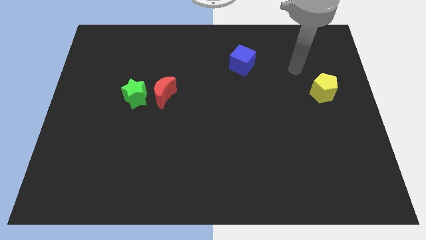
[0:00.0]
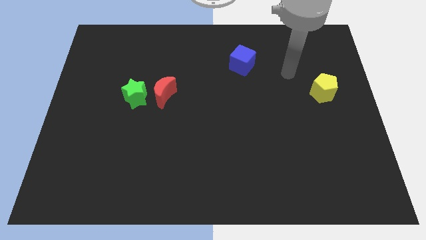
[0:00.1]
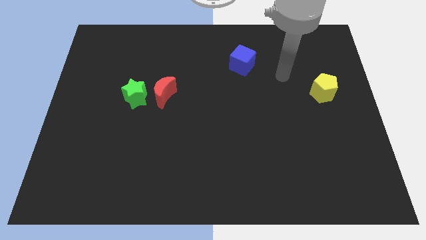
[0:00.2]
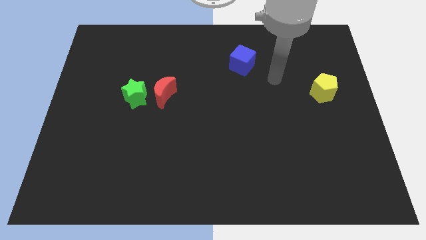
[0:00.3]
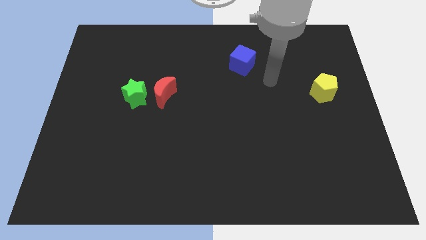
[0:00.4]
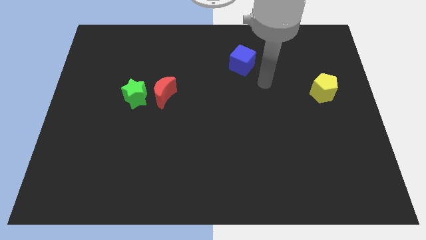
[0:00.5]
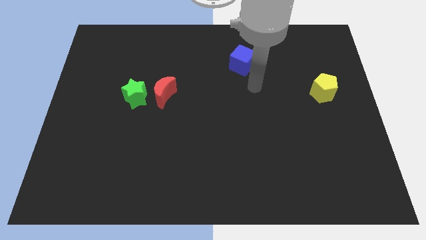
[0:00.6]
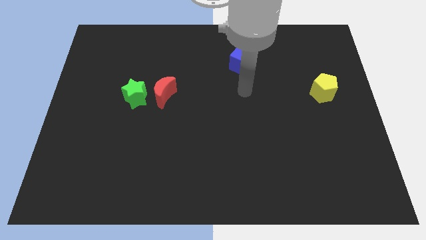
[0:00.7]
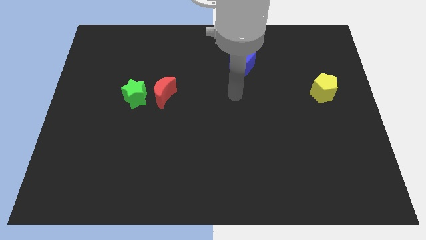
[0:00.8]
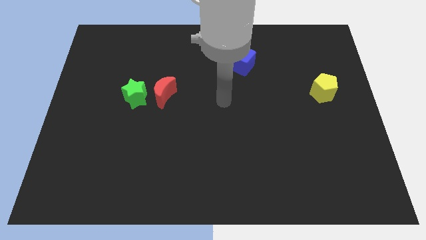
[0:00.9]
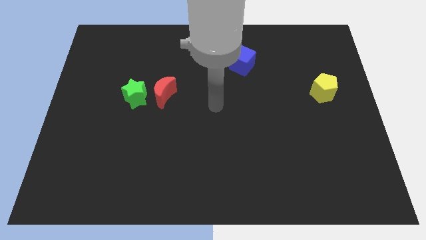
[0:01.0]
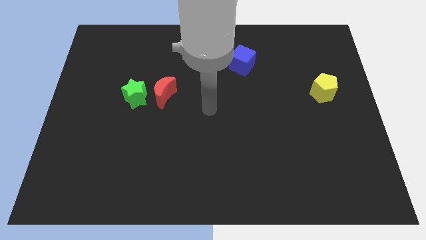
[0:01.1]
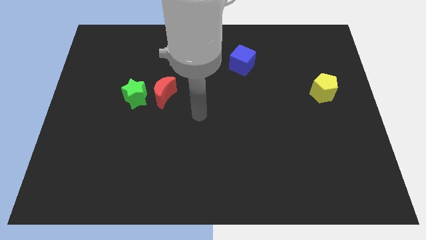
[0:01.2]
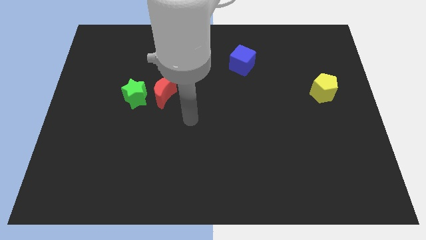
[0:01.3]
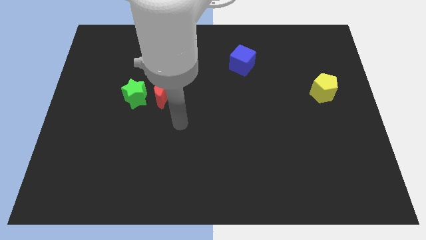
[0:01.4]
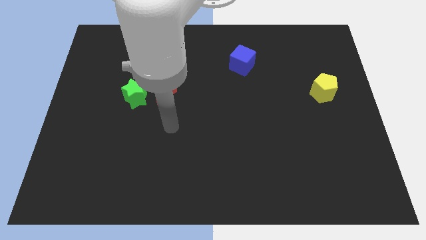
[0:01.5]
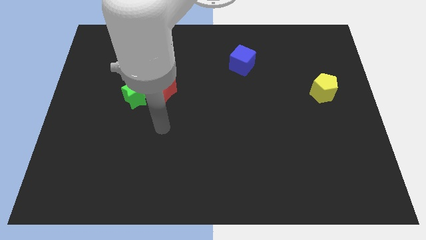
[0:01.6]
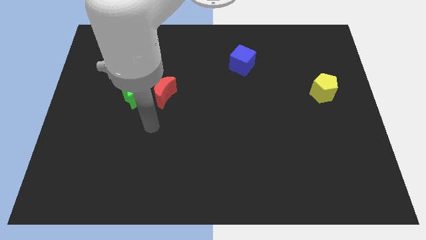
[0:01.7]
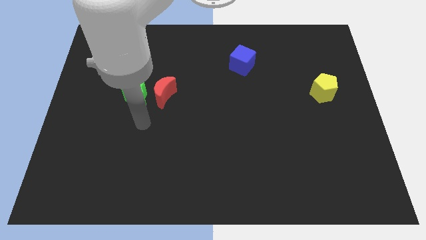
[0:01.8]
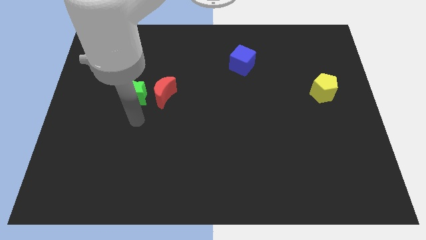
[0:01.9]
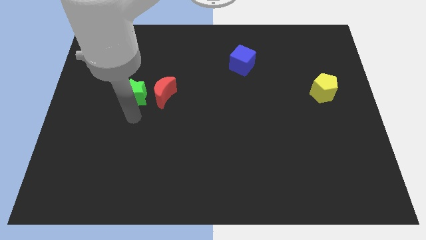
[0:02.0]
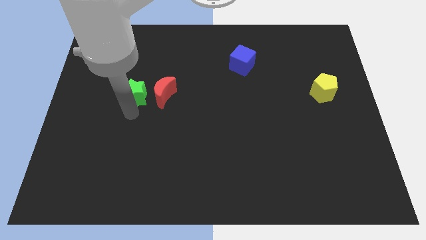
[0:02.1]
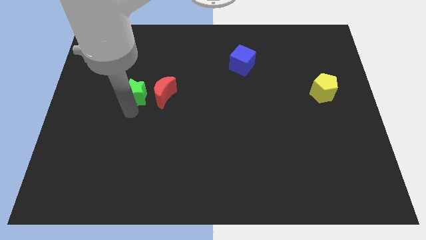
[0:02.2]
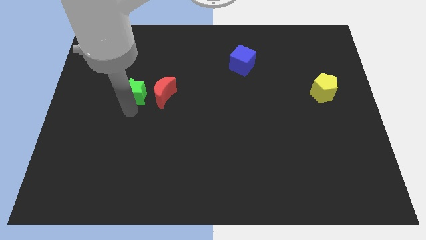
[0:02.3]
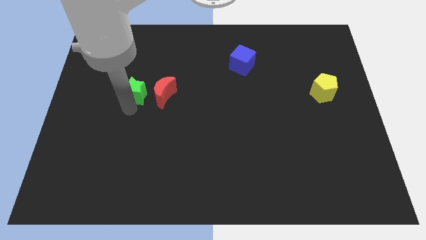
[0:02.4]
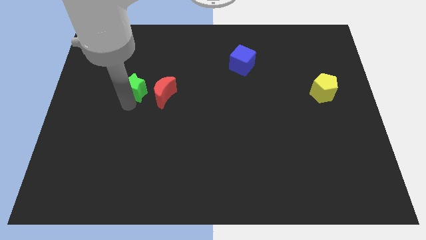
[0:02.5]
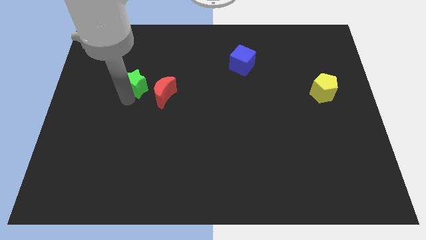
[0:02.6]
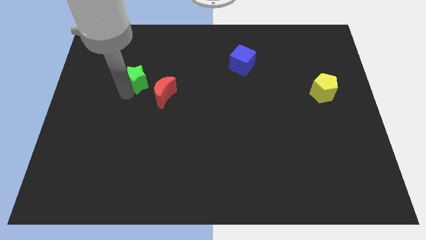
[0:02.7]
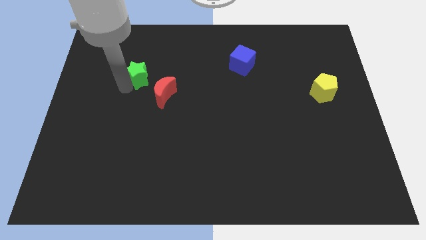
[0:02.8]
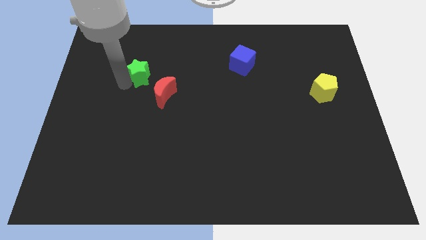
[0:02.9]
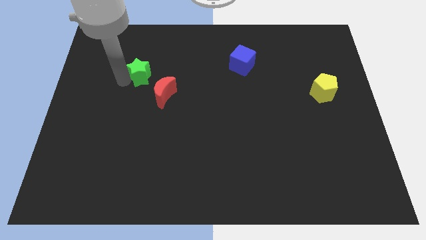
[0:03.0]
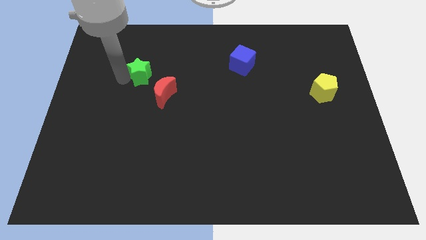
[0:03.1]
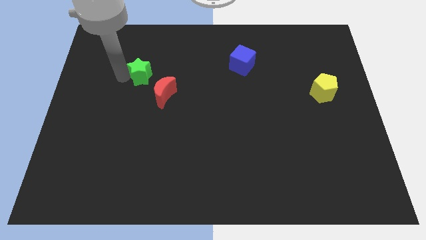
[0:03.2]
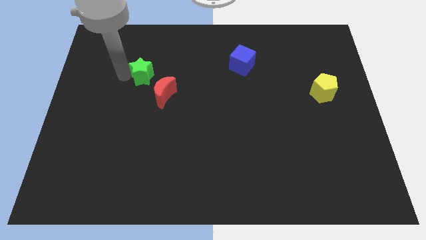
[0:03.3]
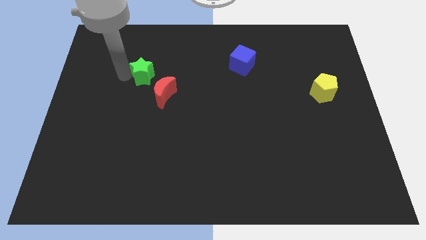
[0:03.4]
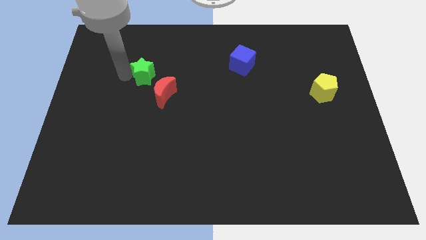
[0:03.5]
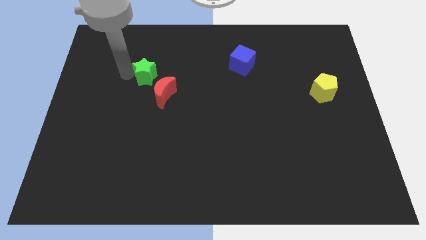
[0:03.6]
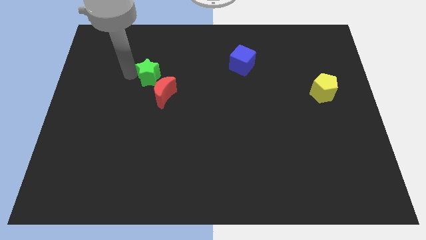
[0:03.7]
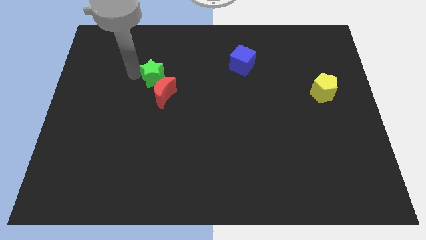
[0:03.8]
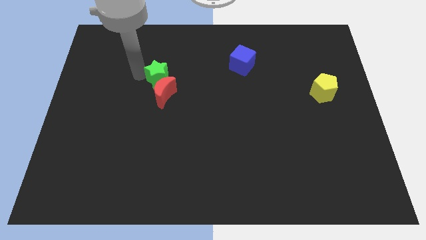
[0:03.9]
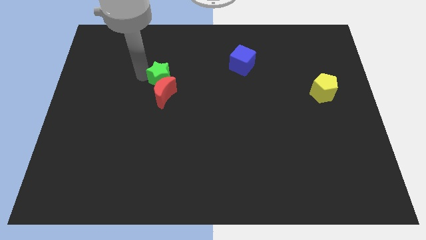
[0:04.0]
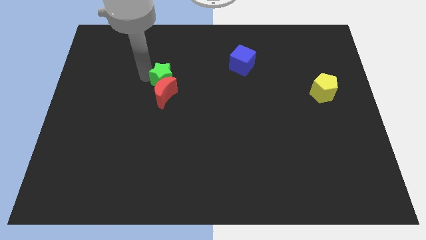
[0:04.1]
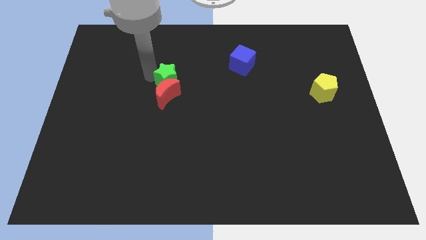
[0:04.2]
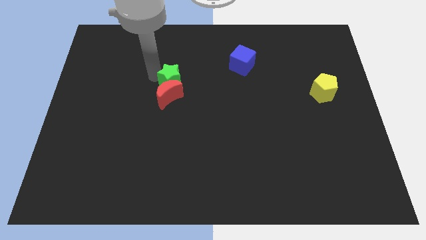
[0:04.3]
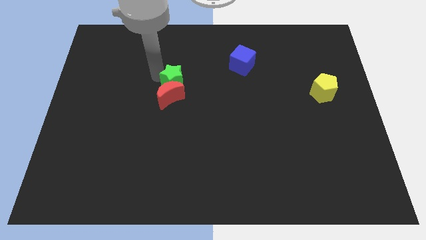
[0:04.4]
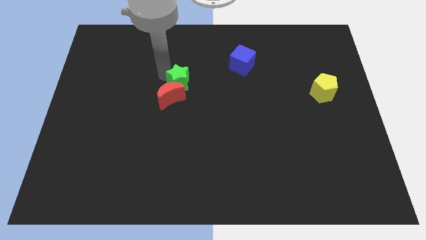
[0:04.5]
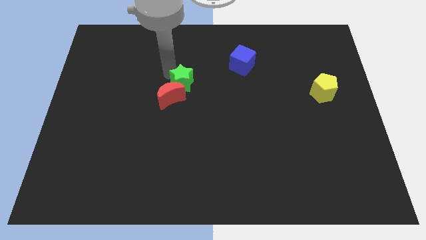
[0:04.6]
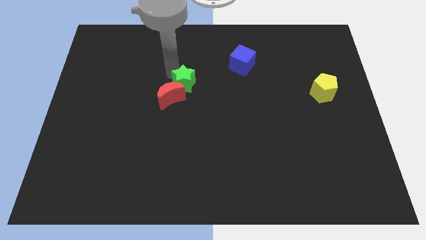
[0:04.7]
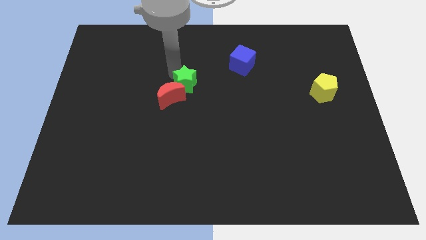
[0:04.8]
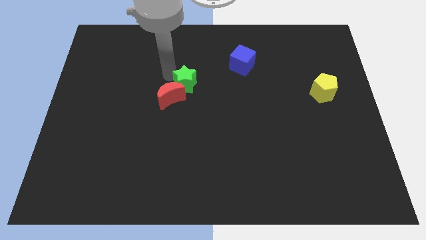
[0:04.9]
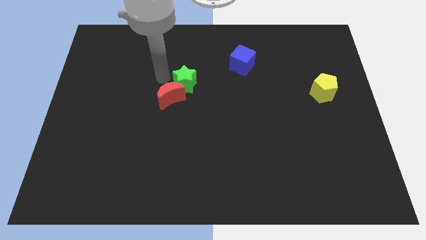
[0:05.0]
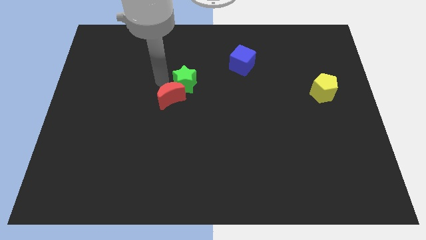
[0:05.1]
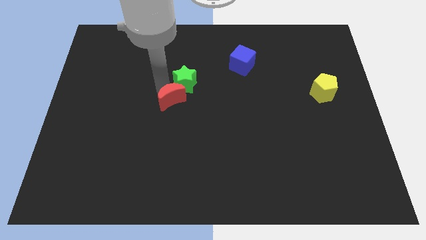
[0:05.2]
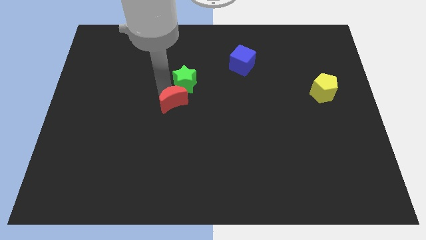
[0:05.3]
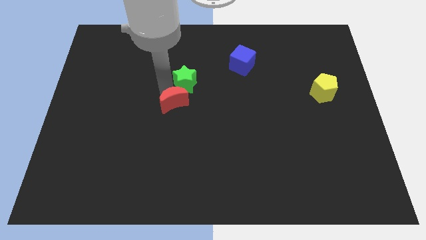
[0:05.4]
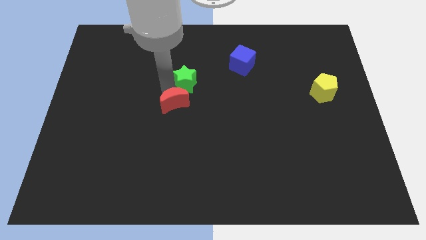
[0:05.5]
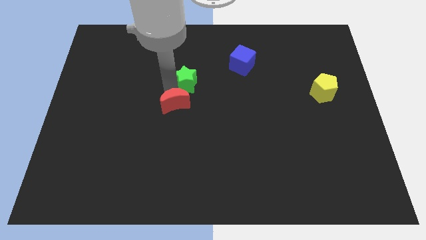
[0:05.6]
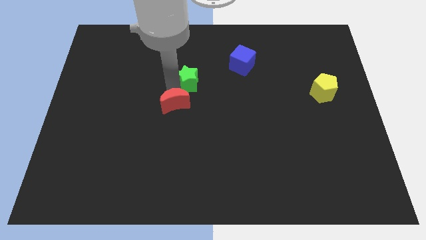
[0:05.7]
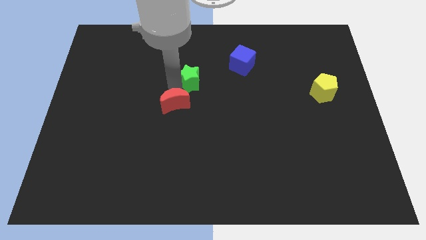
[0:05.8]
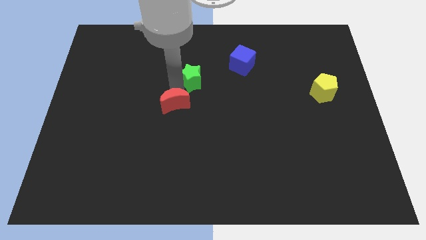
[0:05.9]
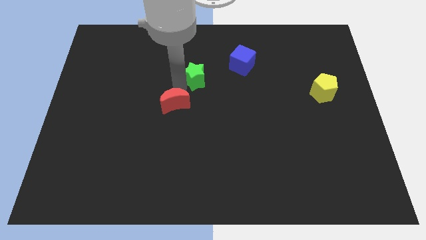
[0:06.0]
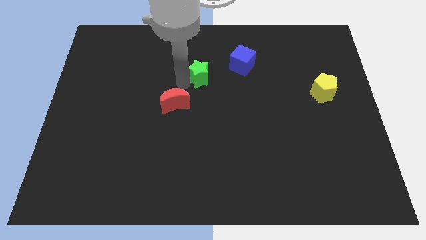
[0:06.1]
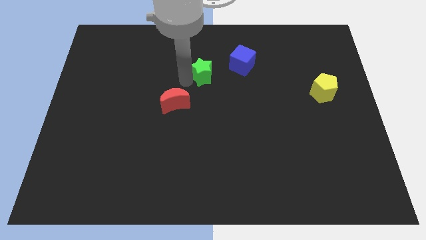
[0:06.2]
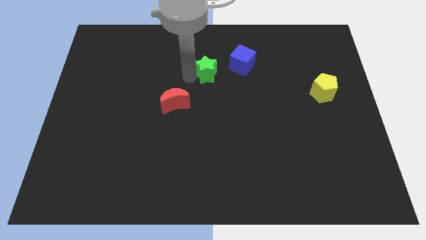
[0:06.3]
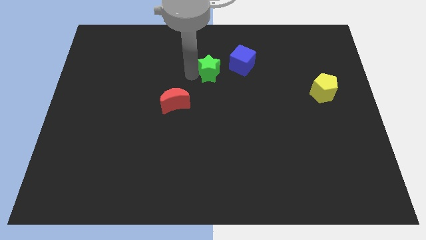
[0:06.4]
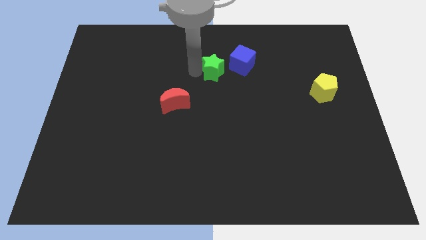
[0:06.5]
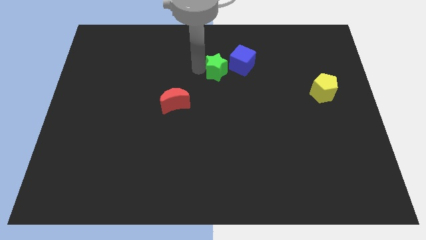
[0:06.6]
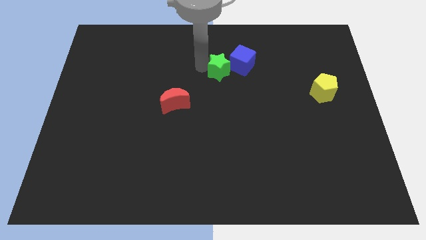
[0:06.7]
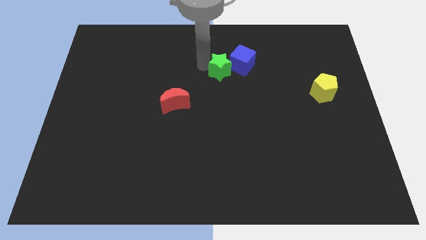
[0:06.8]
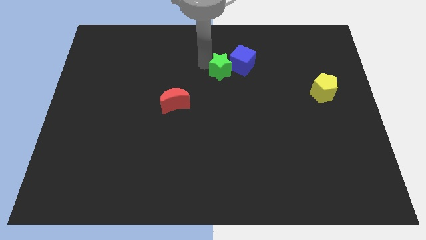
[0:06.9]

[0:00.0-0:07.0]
push the star towards the blue block

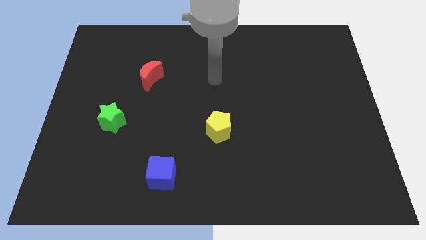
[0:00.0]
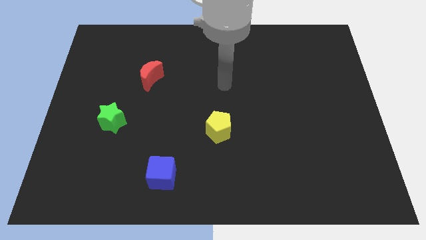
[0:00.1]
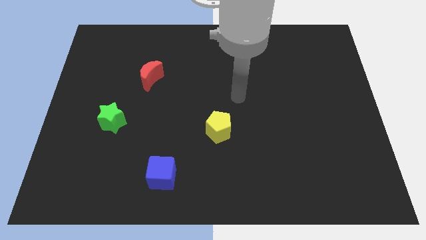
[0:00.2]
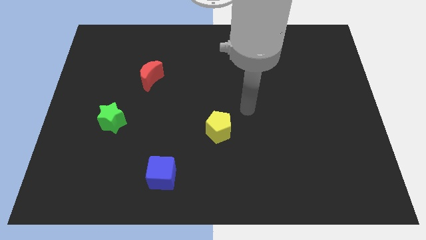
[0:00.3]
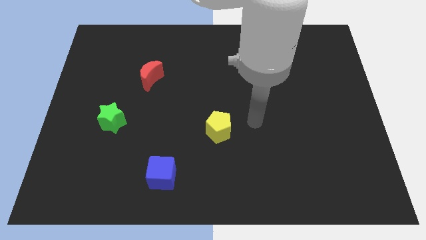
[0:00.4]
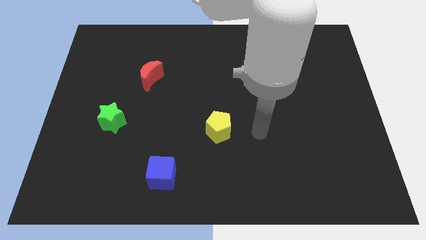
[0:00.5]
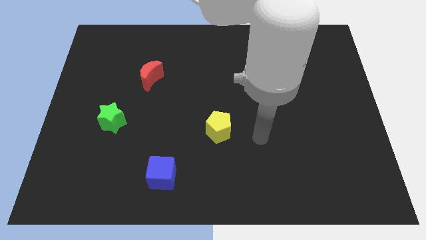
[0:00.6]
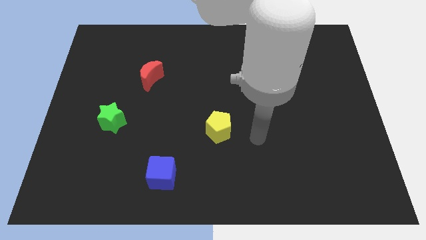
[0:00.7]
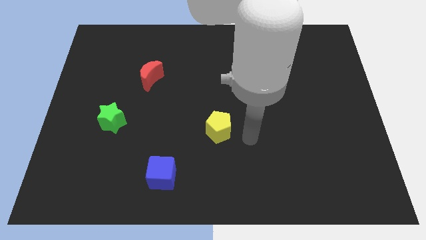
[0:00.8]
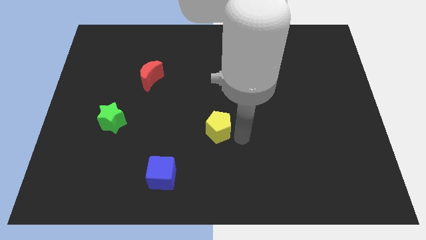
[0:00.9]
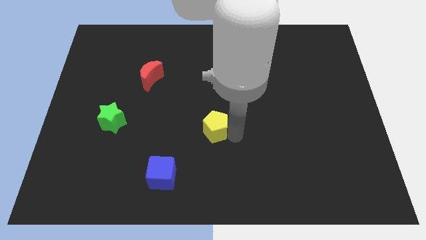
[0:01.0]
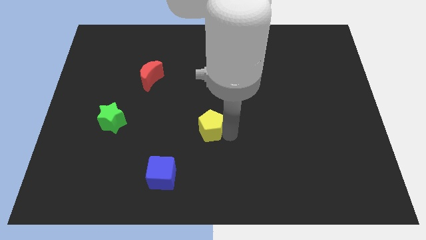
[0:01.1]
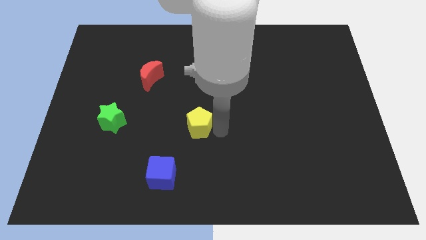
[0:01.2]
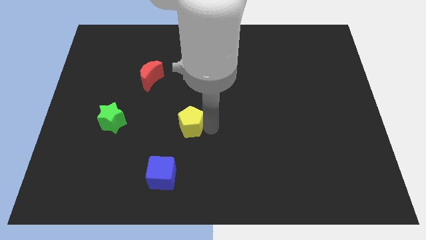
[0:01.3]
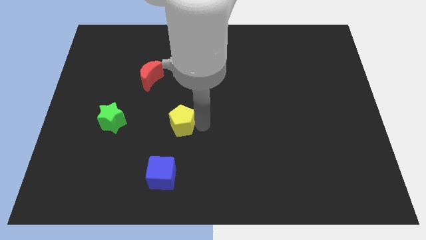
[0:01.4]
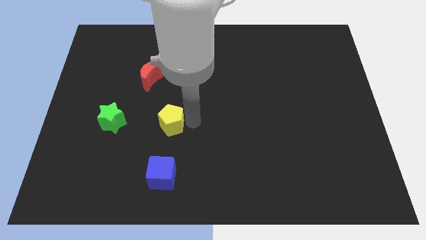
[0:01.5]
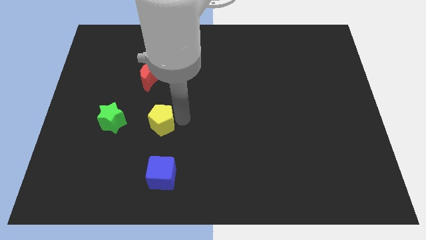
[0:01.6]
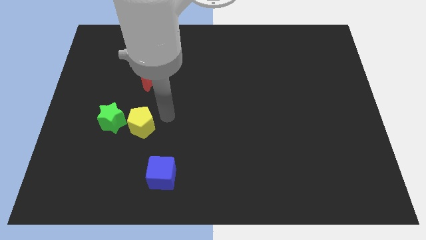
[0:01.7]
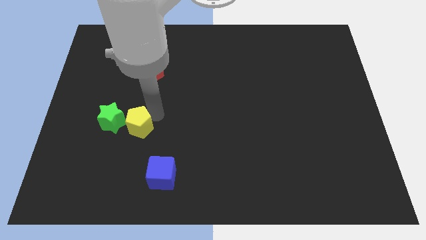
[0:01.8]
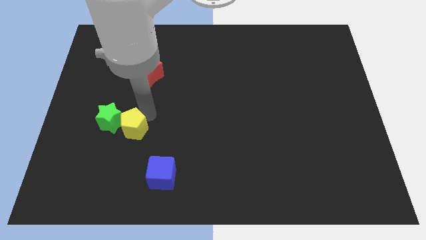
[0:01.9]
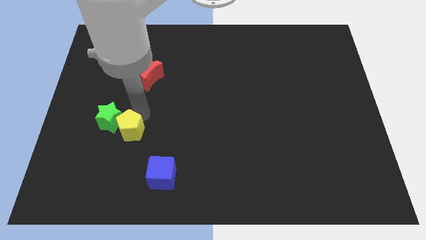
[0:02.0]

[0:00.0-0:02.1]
slide the pentagon towards the star
